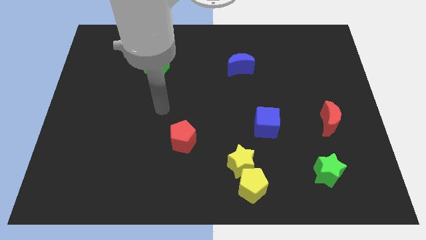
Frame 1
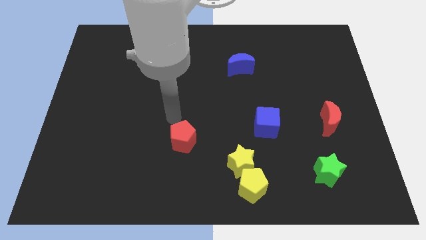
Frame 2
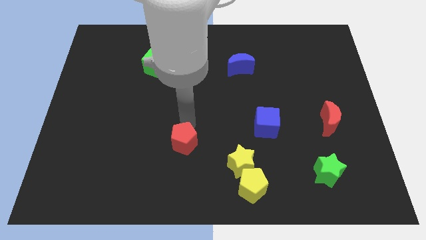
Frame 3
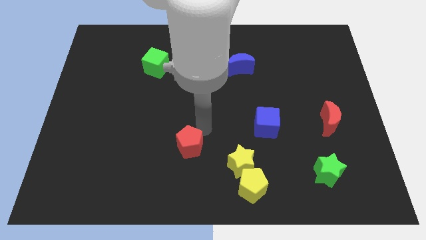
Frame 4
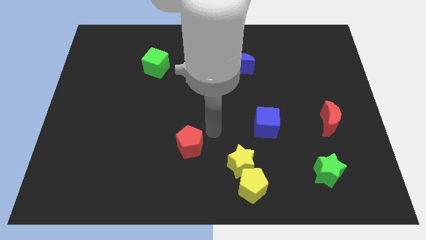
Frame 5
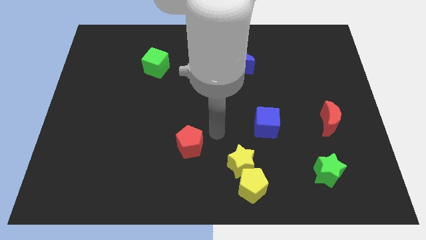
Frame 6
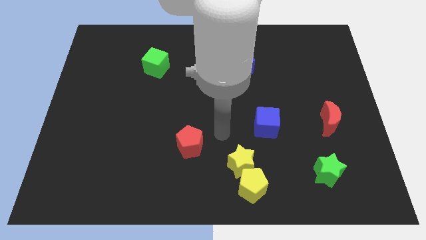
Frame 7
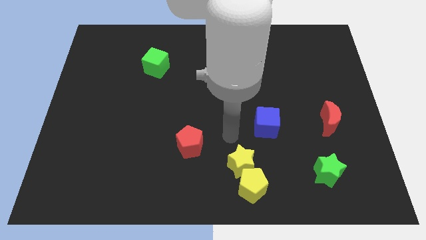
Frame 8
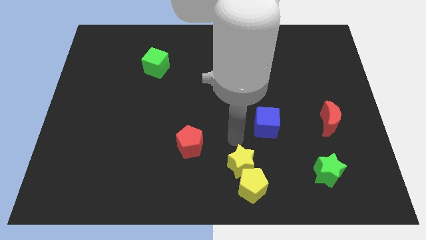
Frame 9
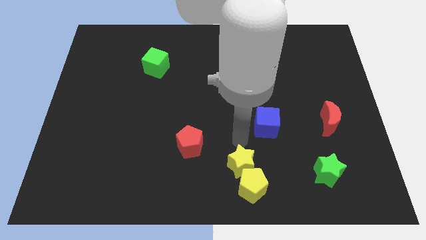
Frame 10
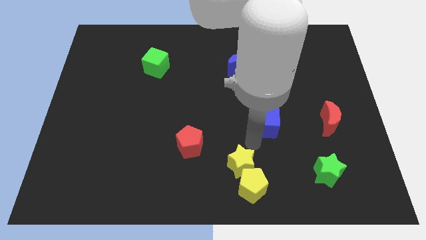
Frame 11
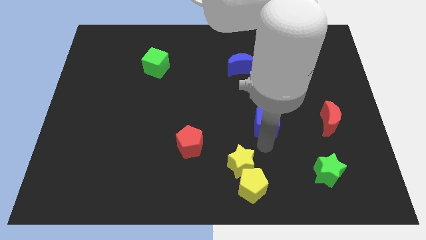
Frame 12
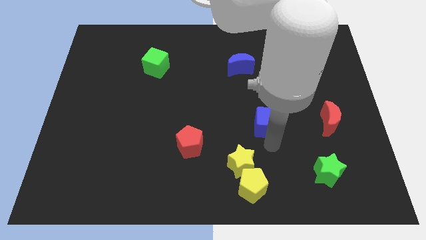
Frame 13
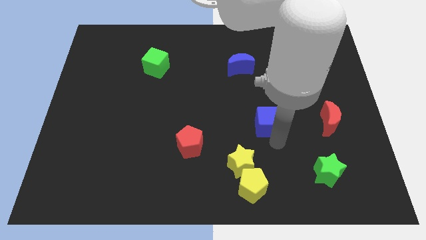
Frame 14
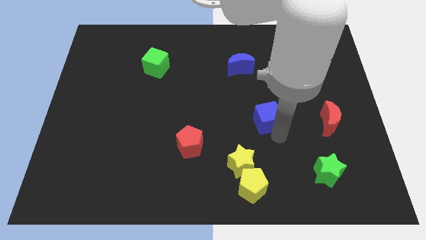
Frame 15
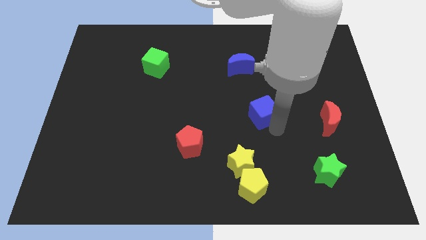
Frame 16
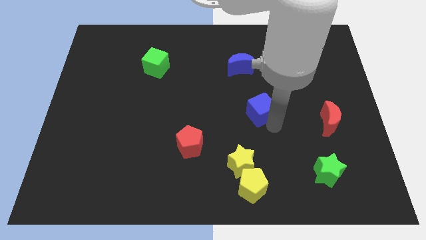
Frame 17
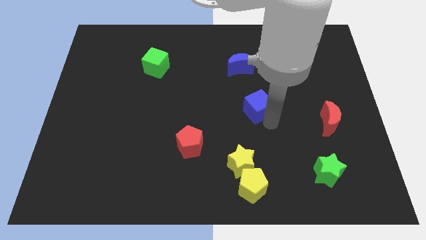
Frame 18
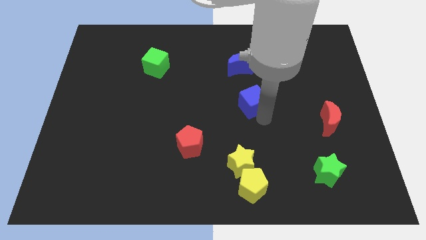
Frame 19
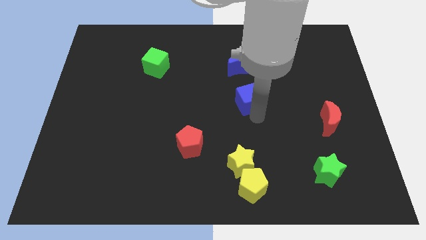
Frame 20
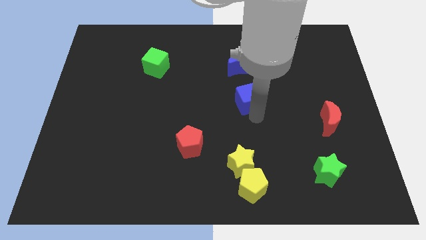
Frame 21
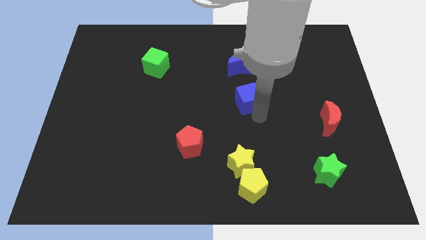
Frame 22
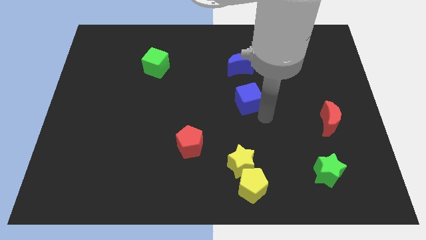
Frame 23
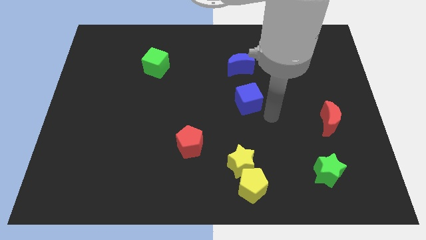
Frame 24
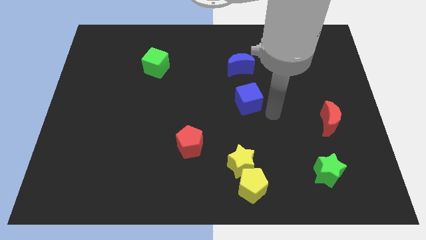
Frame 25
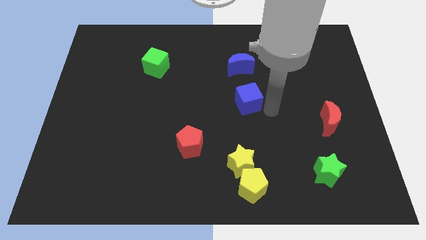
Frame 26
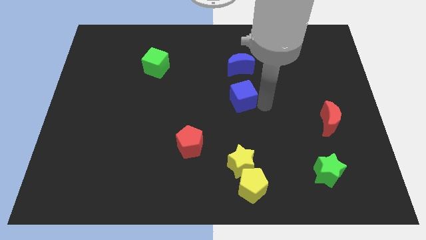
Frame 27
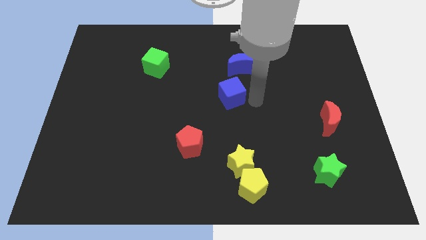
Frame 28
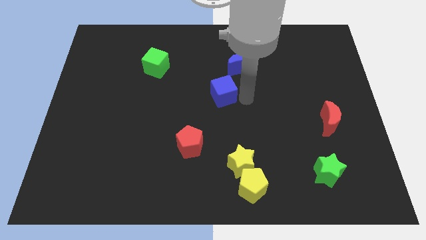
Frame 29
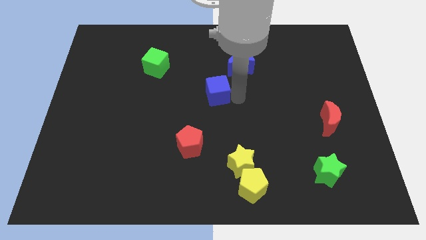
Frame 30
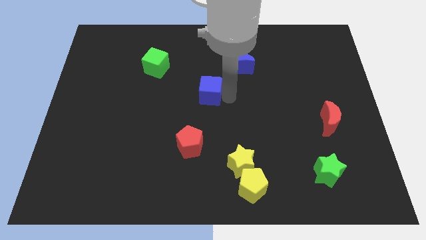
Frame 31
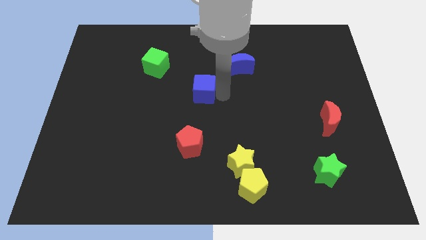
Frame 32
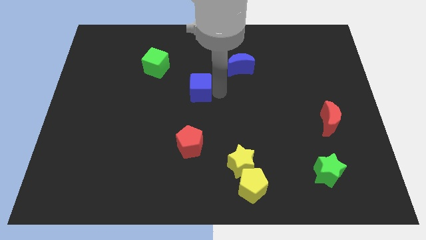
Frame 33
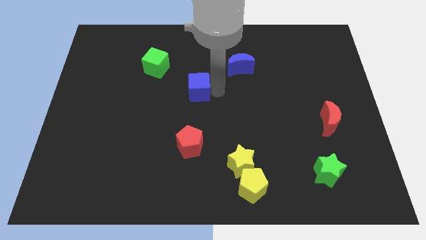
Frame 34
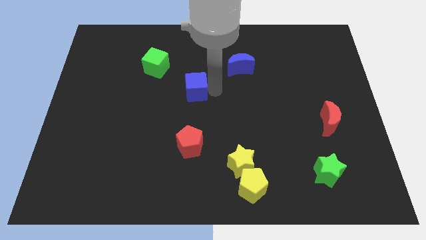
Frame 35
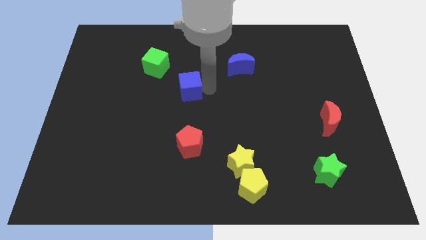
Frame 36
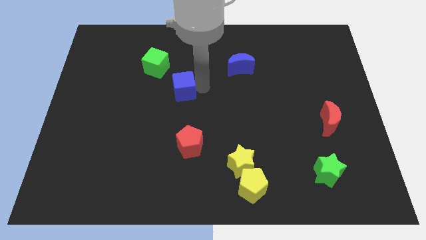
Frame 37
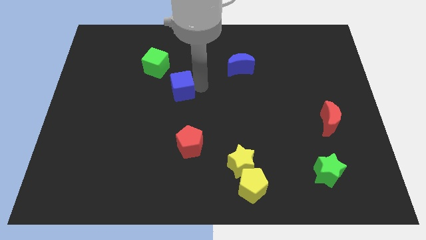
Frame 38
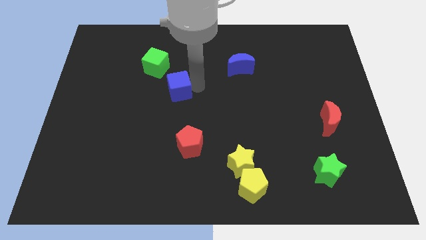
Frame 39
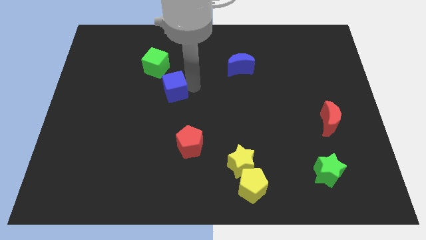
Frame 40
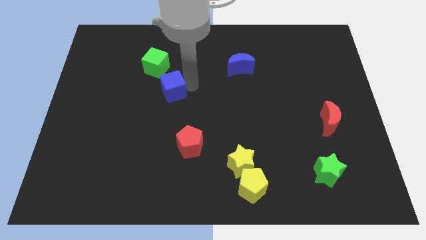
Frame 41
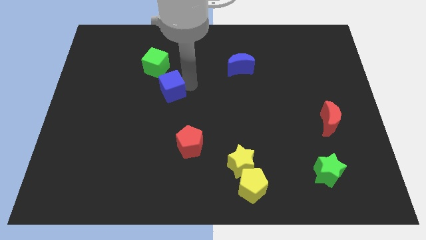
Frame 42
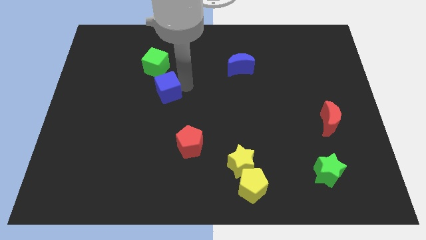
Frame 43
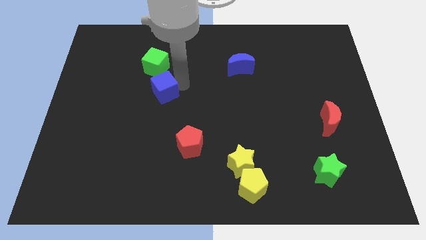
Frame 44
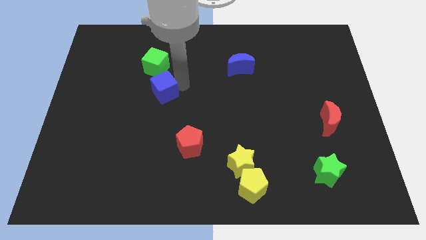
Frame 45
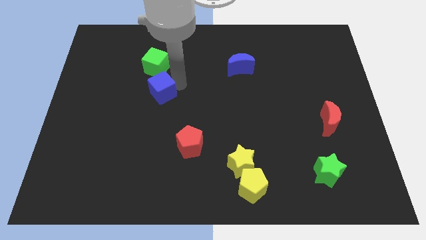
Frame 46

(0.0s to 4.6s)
place the blue cube in between the green cube and red pentagon

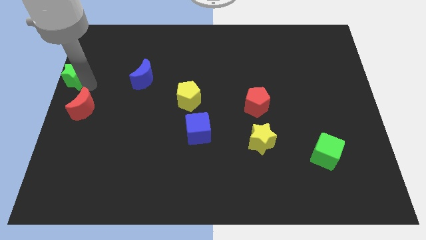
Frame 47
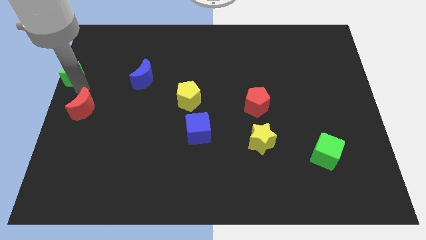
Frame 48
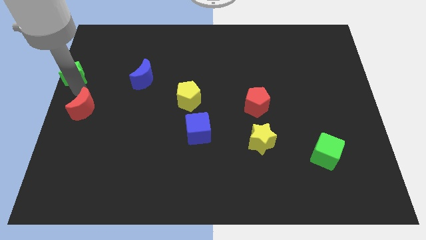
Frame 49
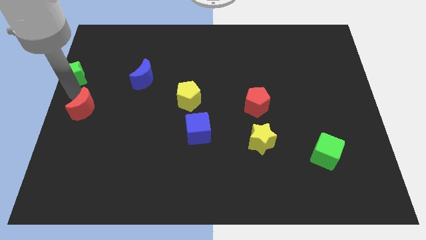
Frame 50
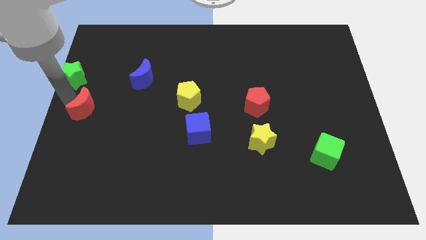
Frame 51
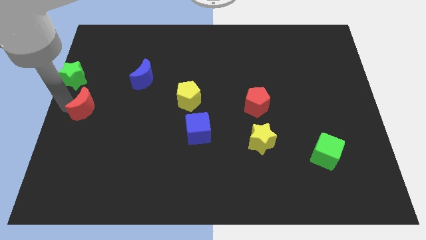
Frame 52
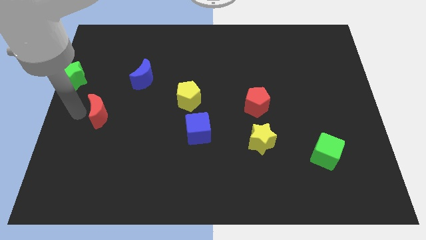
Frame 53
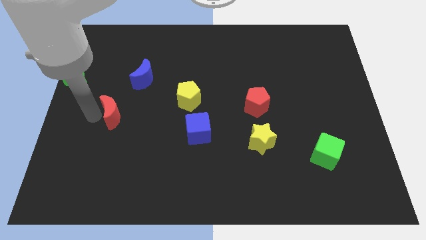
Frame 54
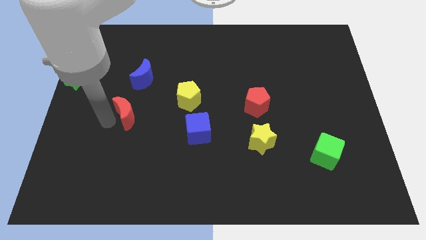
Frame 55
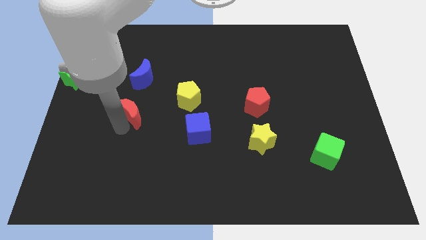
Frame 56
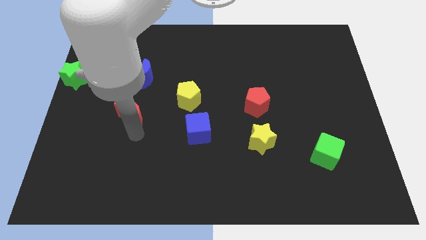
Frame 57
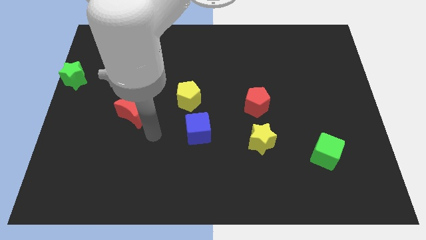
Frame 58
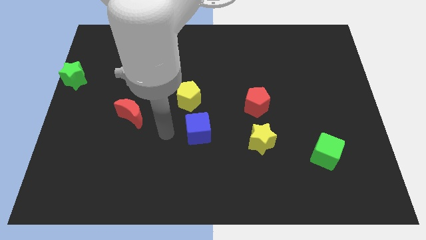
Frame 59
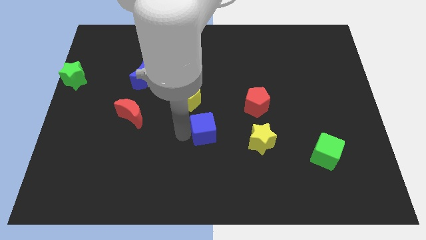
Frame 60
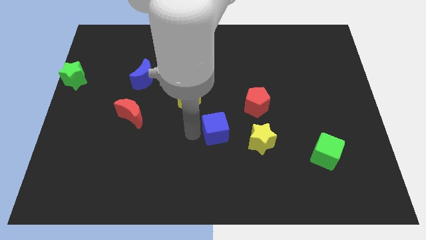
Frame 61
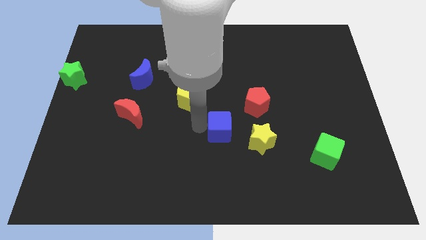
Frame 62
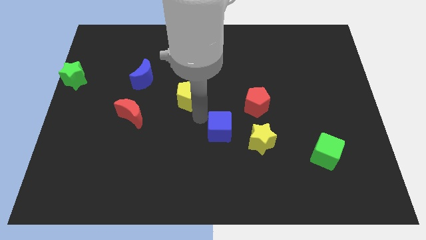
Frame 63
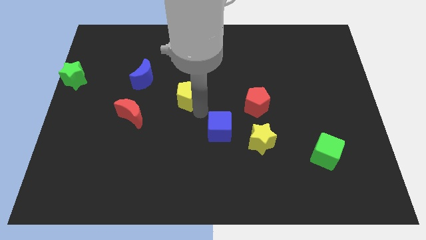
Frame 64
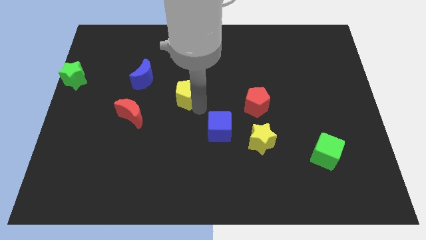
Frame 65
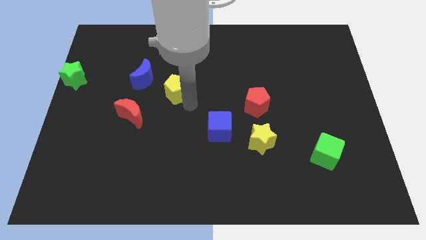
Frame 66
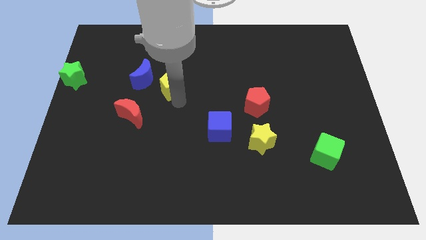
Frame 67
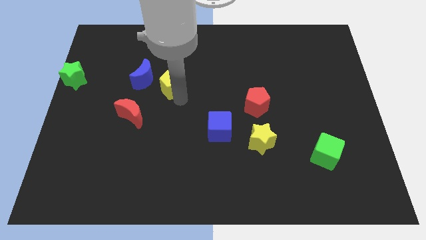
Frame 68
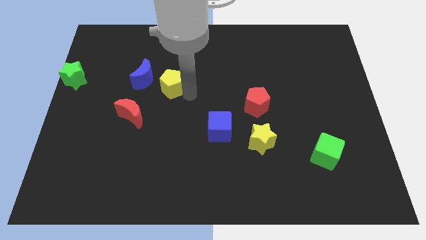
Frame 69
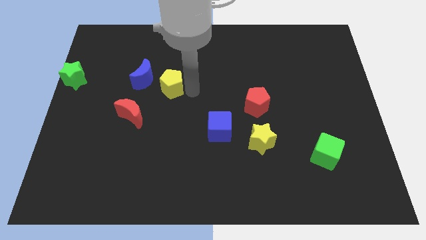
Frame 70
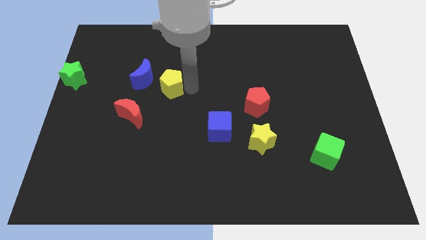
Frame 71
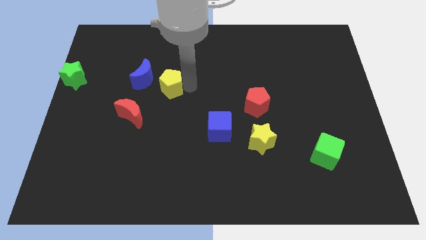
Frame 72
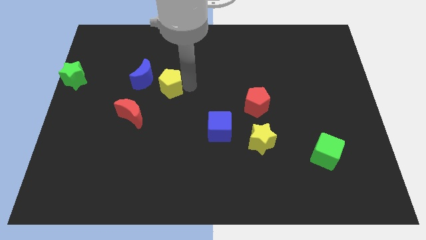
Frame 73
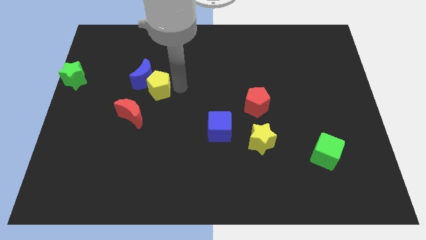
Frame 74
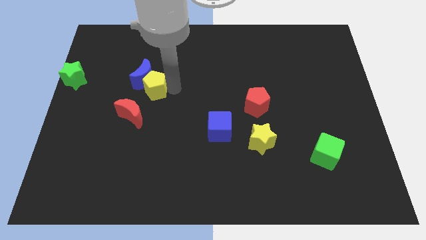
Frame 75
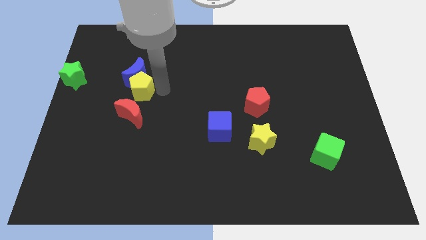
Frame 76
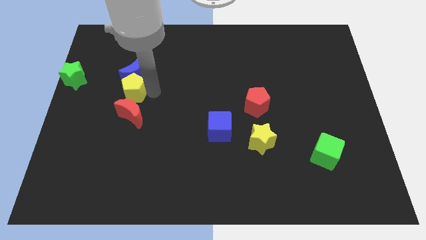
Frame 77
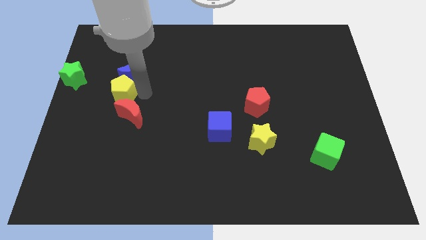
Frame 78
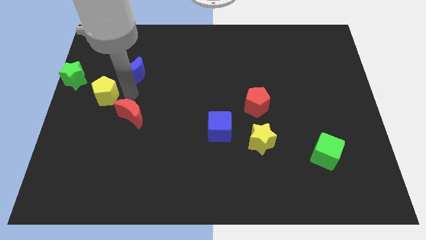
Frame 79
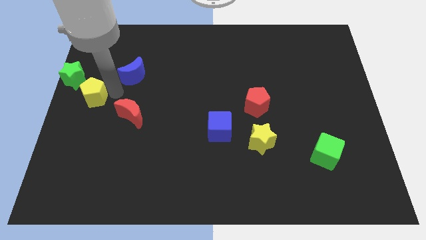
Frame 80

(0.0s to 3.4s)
move yellow pentagon right below the green star

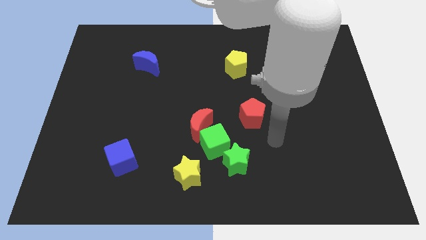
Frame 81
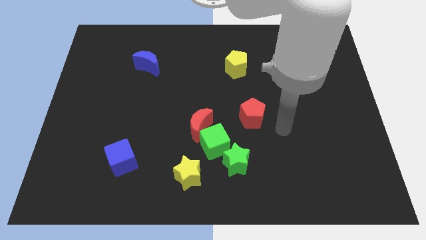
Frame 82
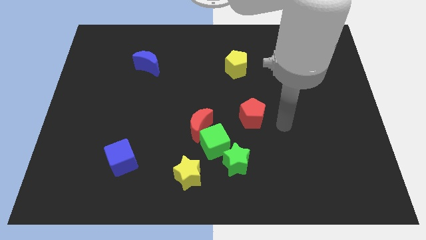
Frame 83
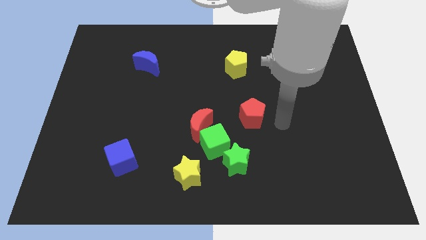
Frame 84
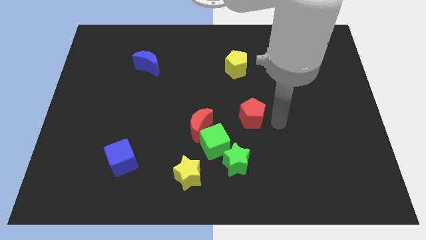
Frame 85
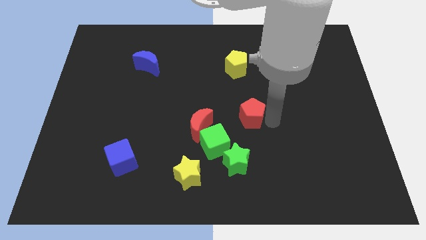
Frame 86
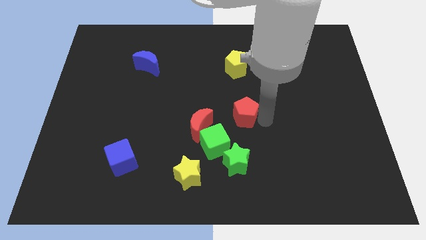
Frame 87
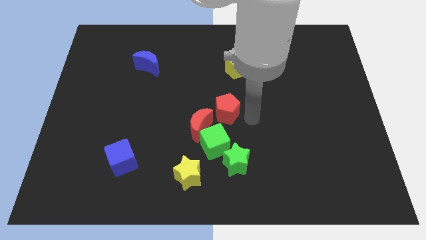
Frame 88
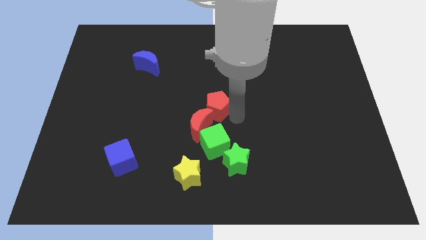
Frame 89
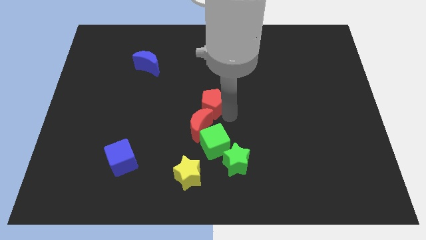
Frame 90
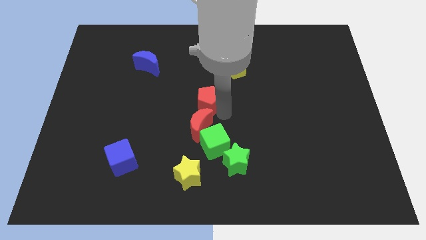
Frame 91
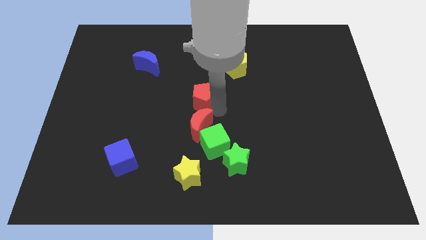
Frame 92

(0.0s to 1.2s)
place the red pentagon at the center of the board
